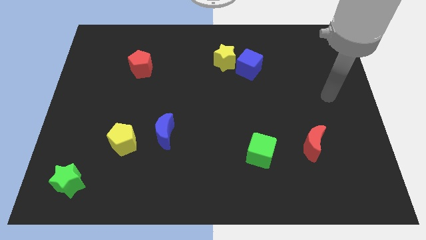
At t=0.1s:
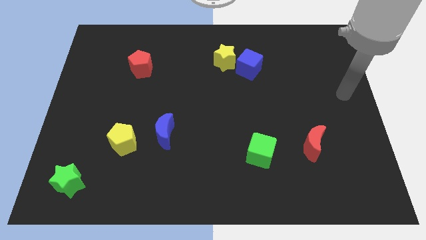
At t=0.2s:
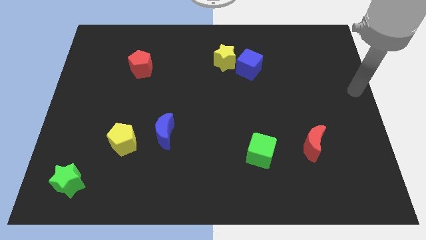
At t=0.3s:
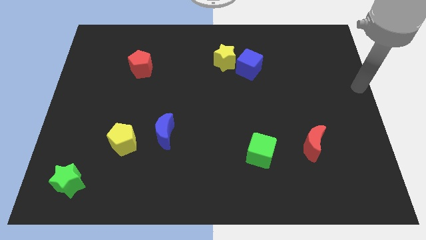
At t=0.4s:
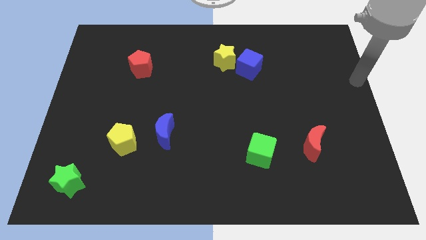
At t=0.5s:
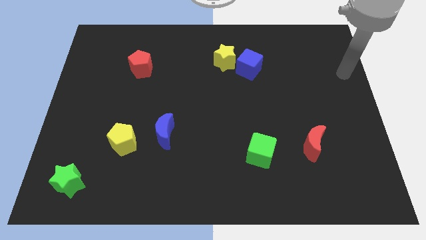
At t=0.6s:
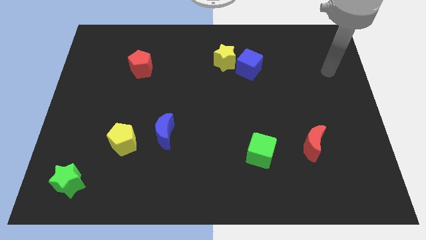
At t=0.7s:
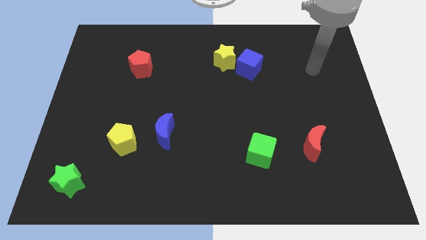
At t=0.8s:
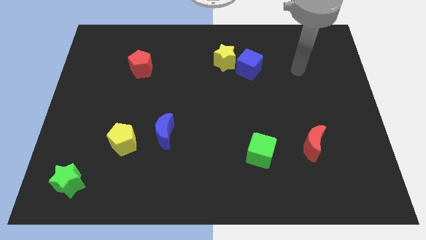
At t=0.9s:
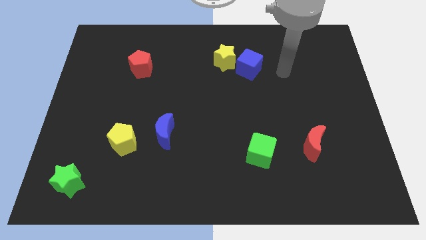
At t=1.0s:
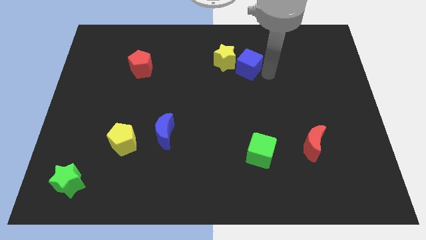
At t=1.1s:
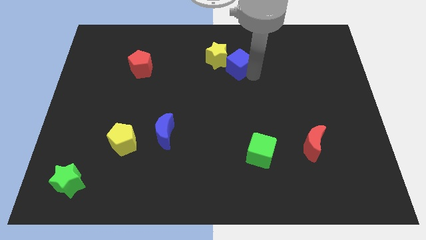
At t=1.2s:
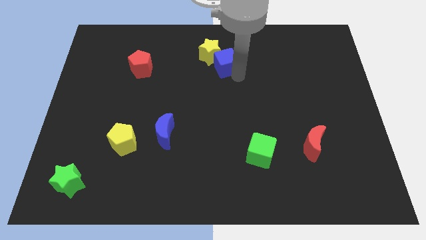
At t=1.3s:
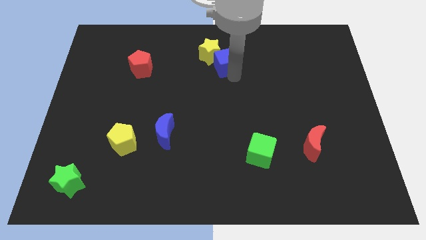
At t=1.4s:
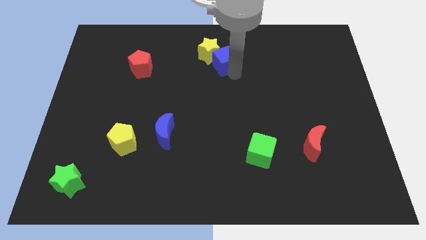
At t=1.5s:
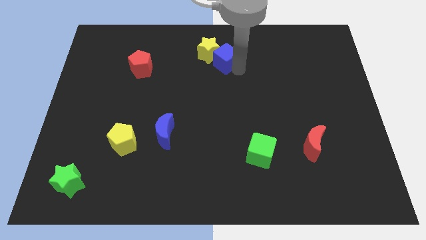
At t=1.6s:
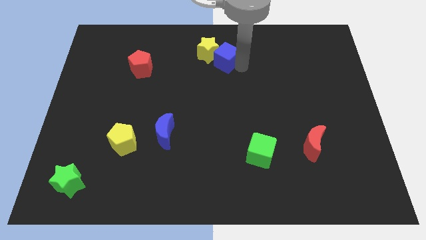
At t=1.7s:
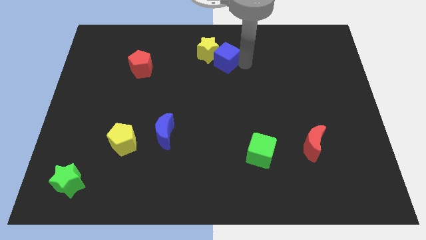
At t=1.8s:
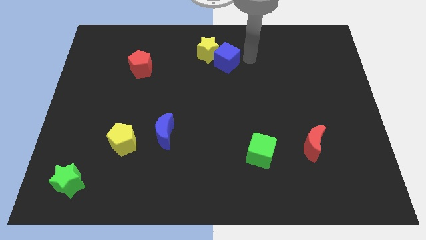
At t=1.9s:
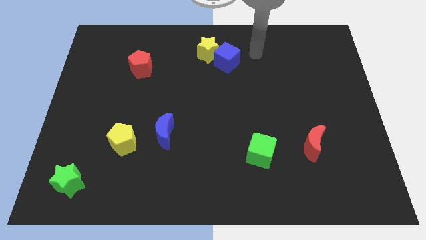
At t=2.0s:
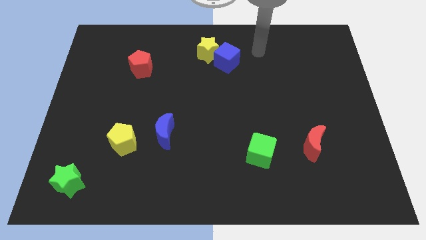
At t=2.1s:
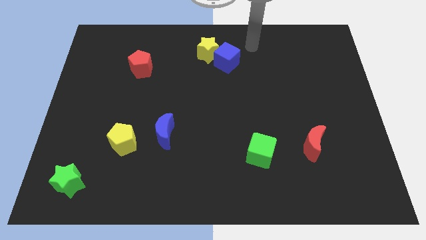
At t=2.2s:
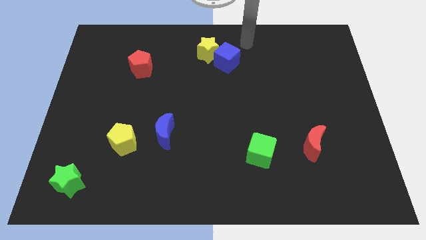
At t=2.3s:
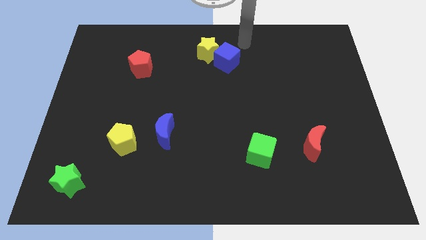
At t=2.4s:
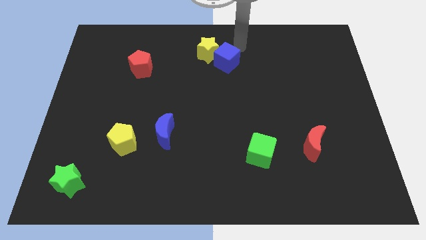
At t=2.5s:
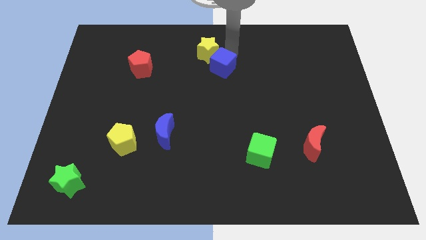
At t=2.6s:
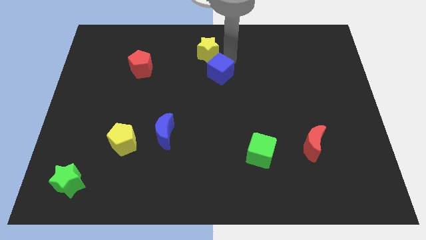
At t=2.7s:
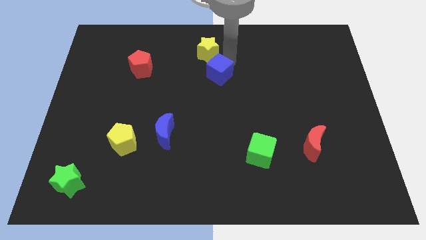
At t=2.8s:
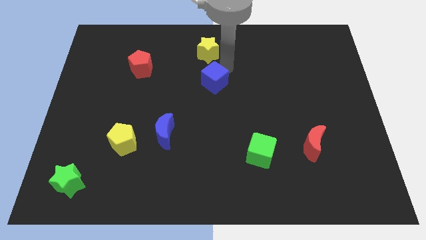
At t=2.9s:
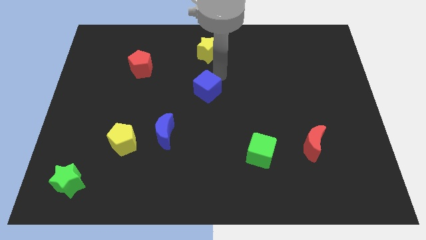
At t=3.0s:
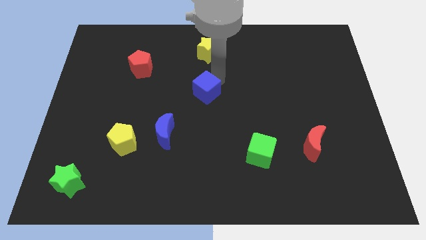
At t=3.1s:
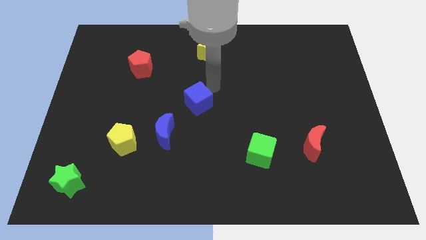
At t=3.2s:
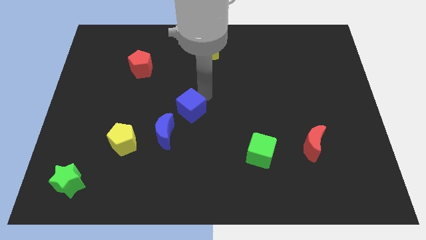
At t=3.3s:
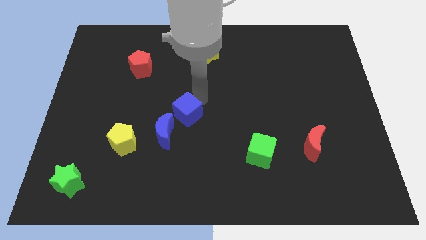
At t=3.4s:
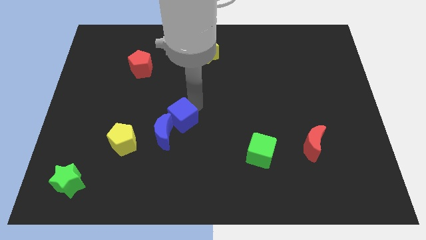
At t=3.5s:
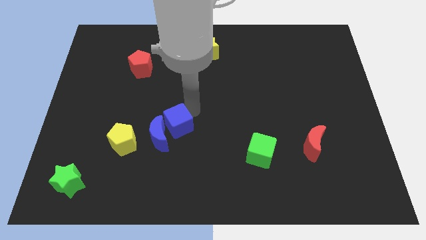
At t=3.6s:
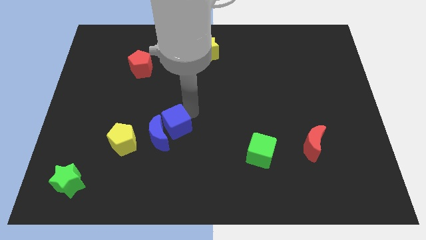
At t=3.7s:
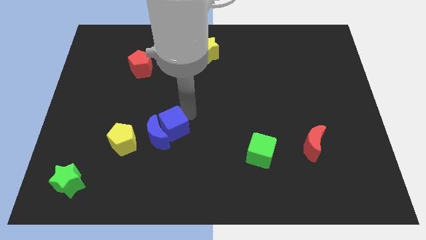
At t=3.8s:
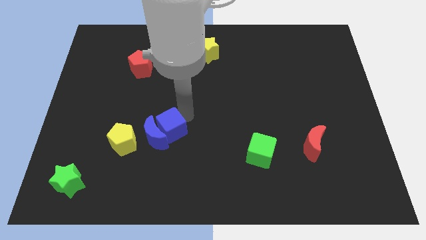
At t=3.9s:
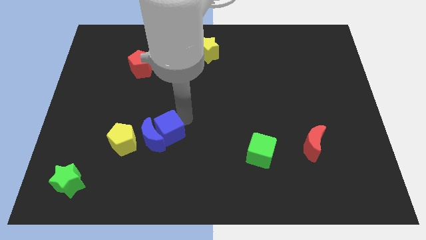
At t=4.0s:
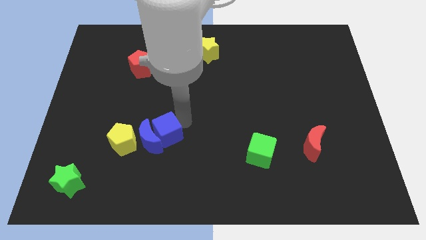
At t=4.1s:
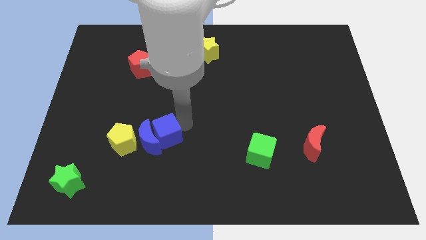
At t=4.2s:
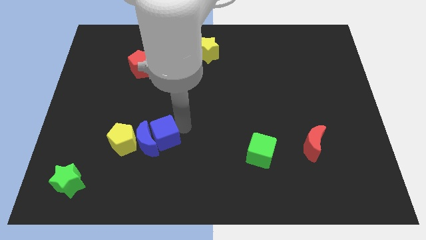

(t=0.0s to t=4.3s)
push the blue cube into the blue crescent

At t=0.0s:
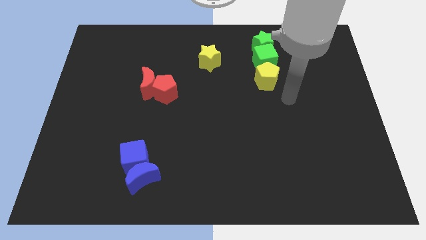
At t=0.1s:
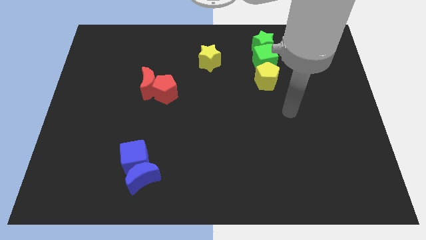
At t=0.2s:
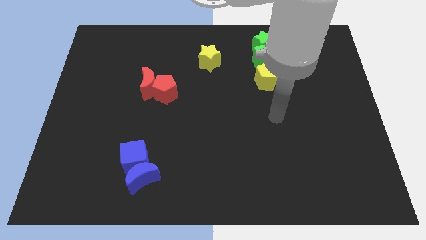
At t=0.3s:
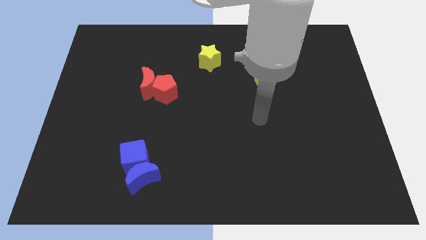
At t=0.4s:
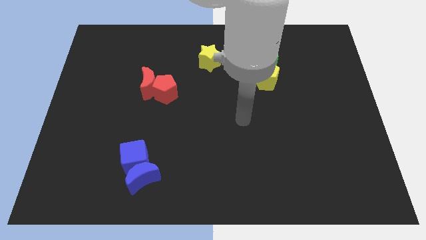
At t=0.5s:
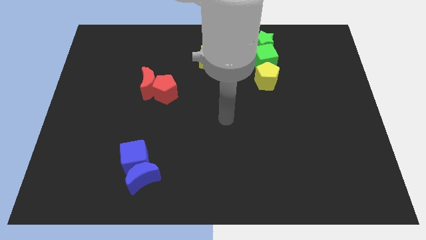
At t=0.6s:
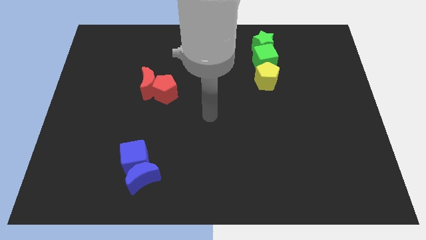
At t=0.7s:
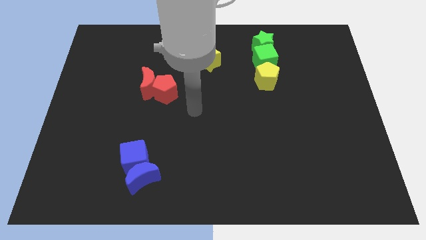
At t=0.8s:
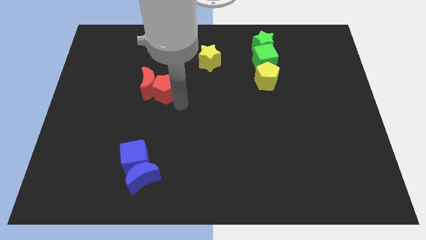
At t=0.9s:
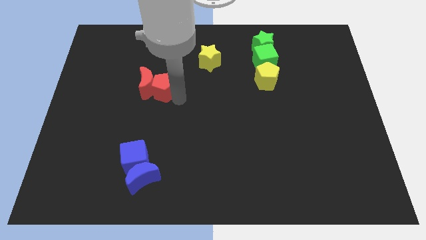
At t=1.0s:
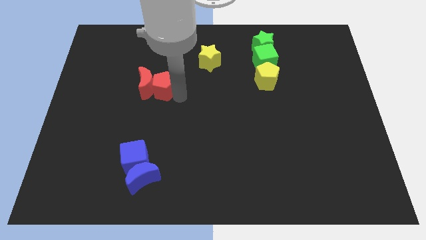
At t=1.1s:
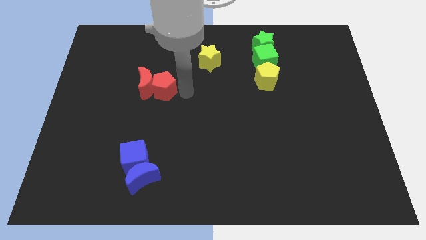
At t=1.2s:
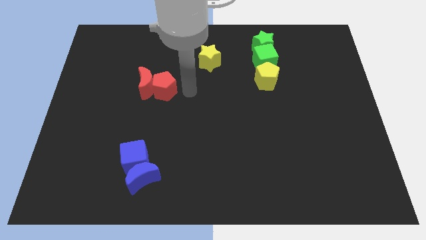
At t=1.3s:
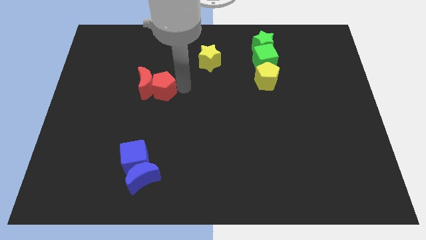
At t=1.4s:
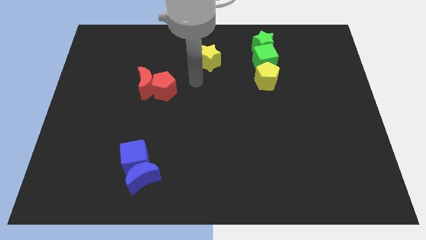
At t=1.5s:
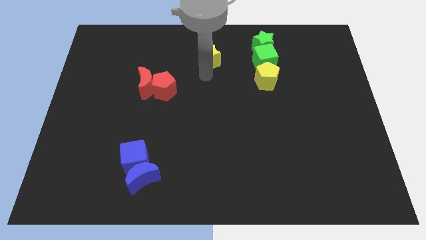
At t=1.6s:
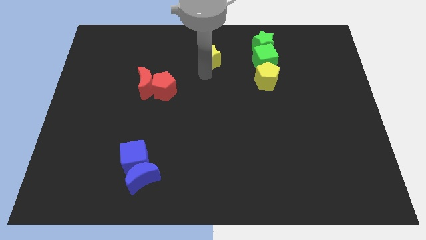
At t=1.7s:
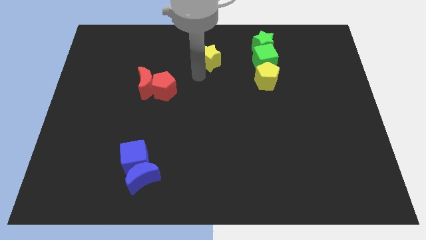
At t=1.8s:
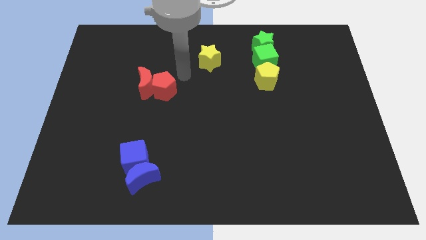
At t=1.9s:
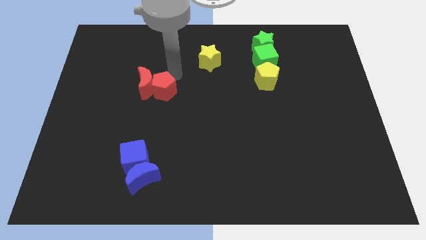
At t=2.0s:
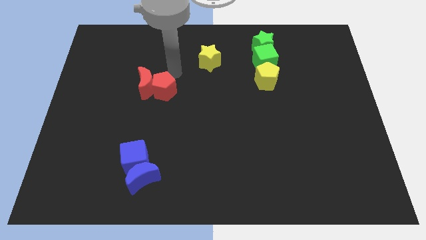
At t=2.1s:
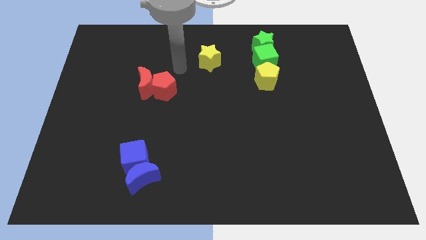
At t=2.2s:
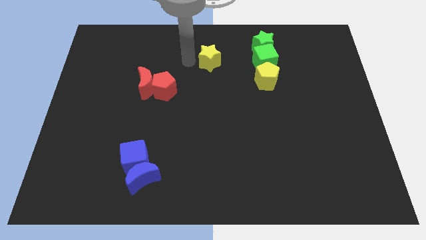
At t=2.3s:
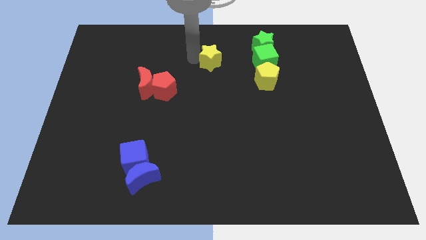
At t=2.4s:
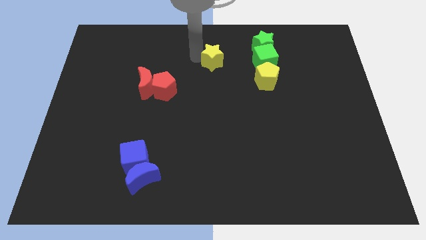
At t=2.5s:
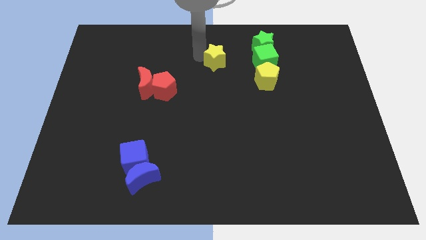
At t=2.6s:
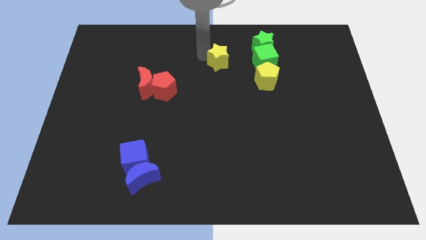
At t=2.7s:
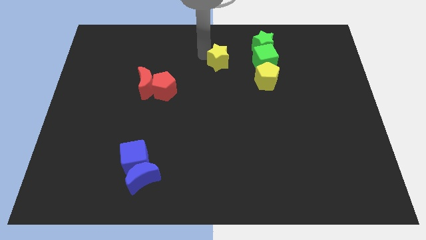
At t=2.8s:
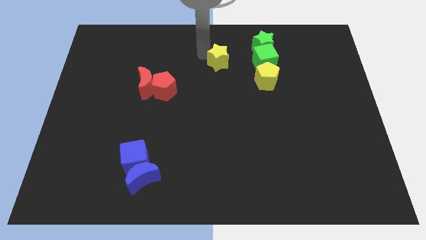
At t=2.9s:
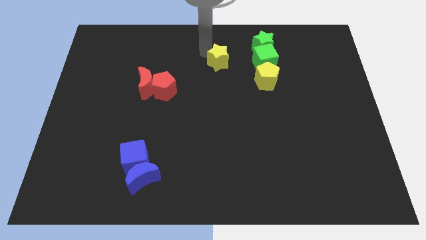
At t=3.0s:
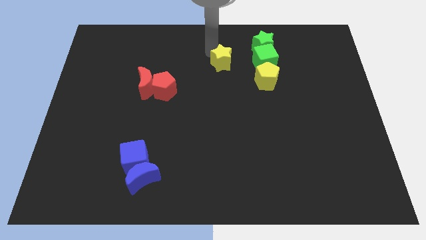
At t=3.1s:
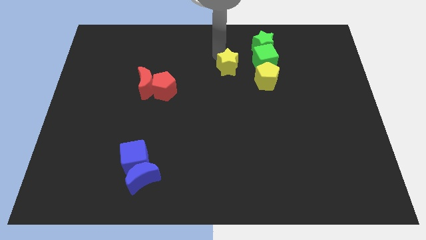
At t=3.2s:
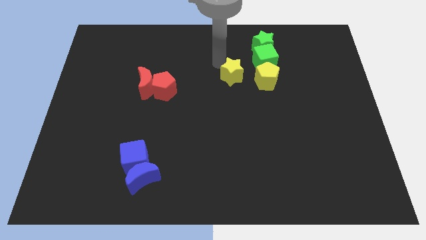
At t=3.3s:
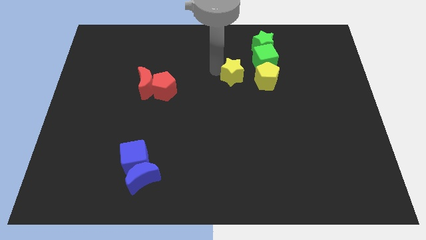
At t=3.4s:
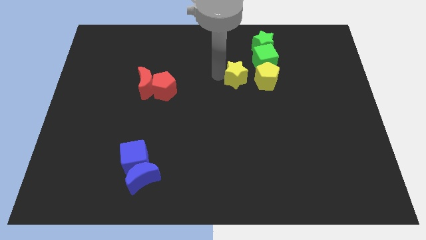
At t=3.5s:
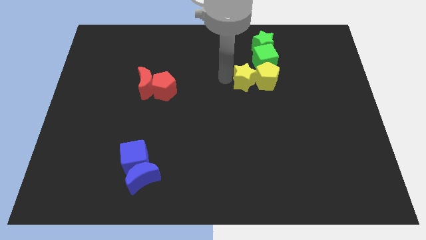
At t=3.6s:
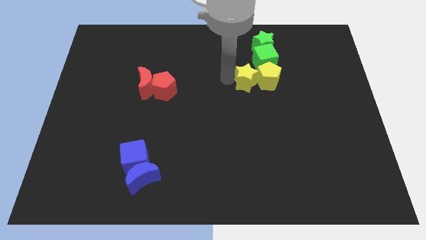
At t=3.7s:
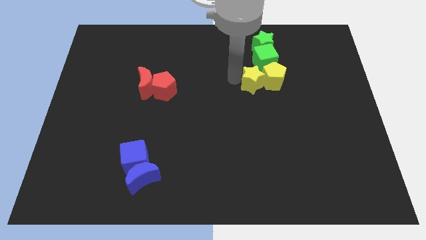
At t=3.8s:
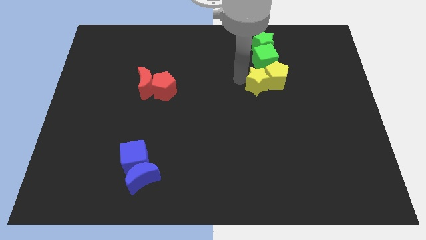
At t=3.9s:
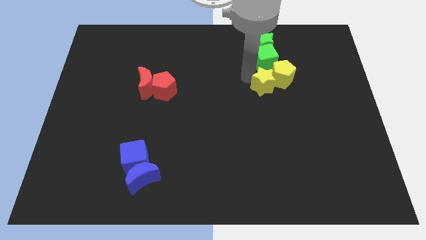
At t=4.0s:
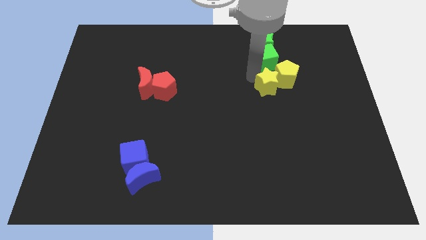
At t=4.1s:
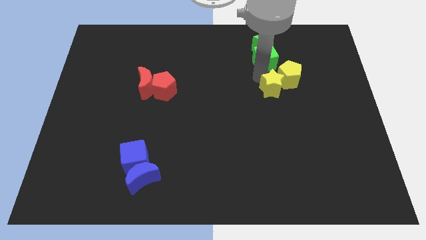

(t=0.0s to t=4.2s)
slightly move the red blocks to the left of the board and yellow blocks to the bottom side of the green cube

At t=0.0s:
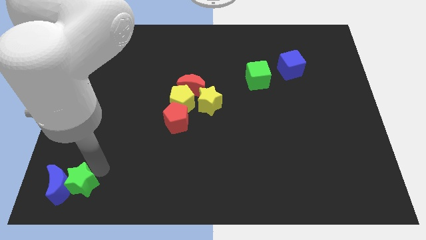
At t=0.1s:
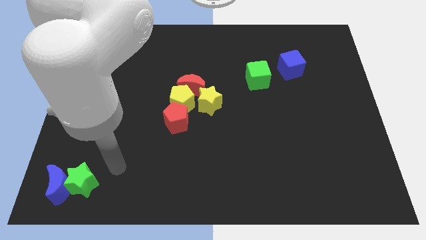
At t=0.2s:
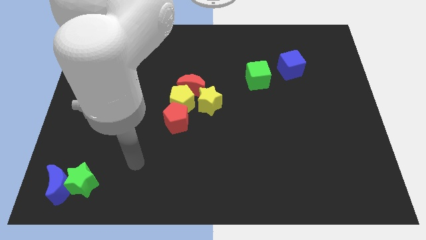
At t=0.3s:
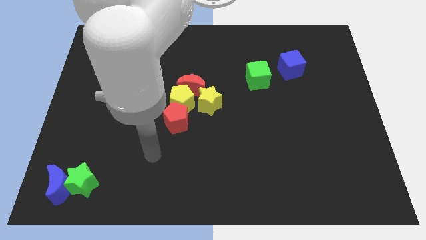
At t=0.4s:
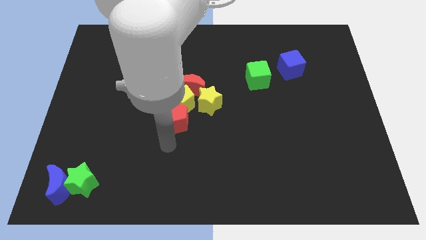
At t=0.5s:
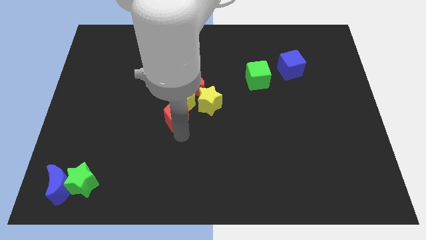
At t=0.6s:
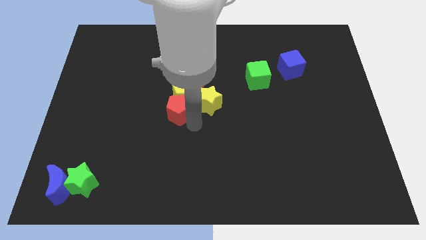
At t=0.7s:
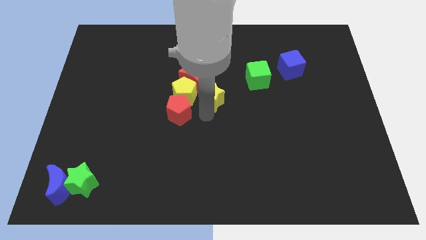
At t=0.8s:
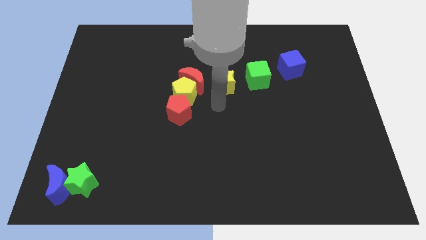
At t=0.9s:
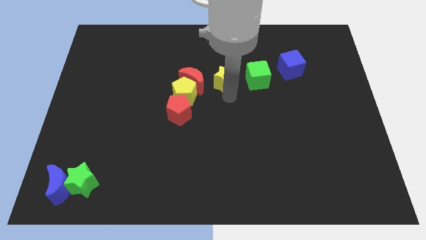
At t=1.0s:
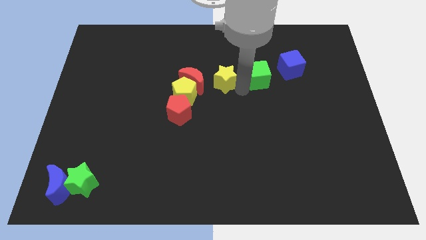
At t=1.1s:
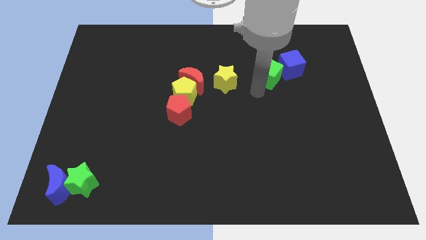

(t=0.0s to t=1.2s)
move the yellow star towards the left side of the green cube
